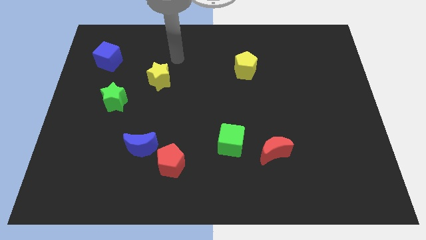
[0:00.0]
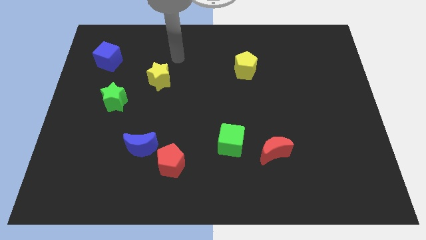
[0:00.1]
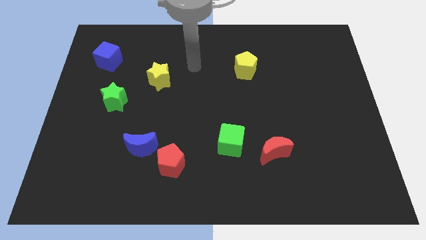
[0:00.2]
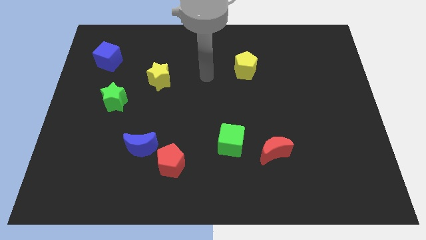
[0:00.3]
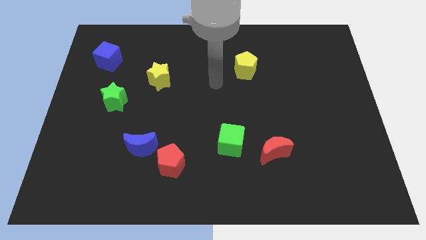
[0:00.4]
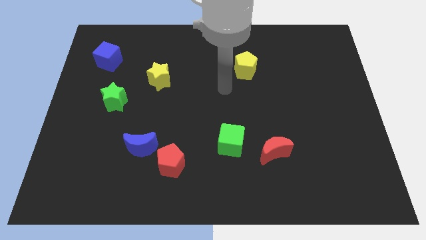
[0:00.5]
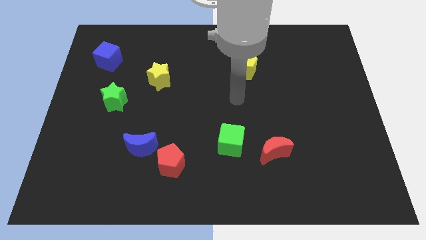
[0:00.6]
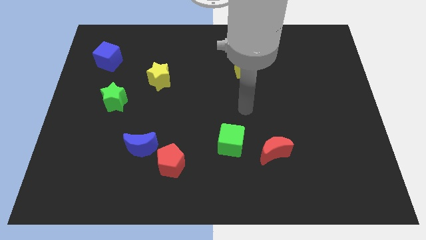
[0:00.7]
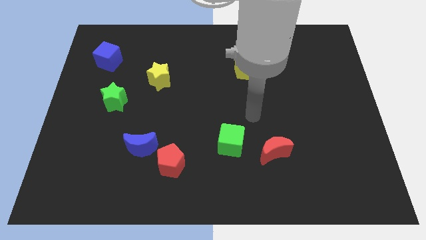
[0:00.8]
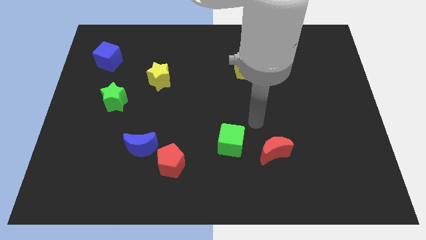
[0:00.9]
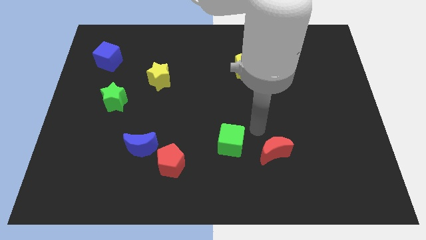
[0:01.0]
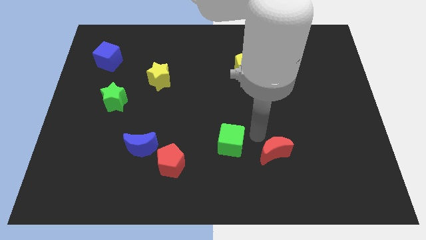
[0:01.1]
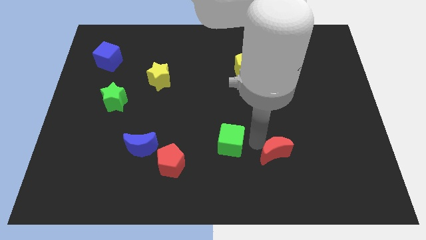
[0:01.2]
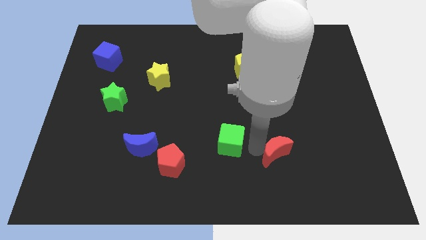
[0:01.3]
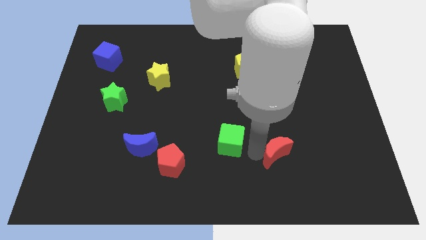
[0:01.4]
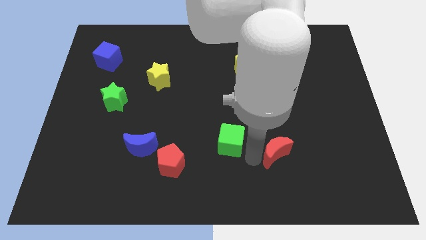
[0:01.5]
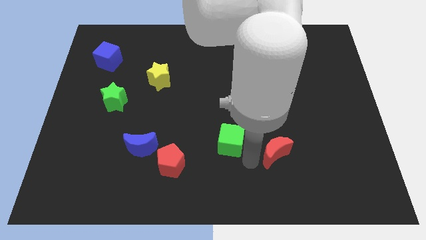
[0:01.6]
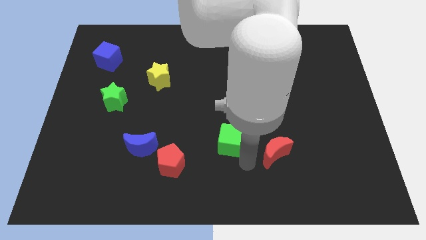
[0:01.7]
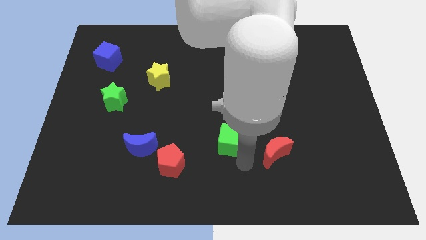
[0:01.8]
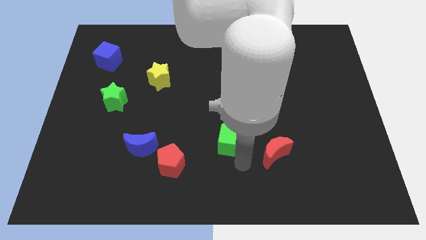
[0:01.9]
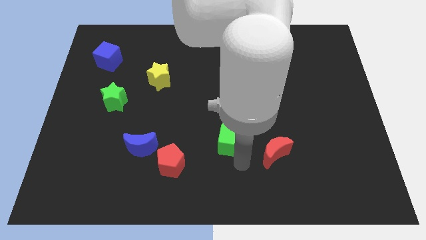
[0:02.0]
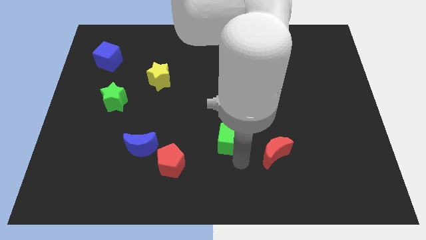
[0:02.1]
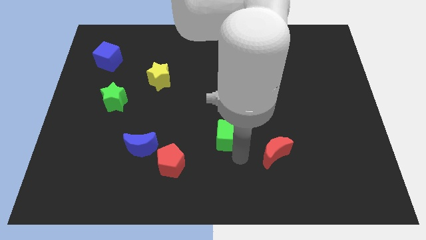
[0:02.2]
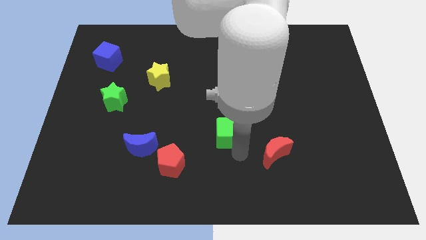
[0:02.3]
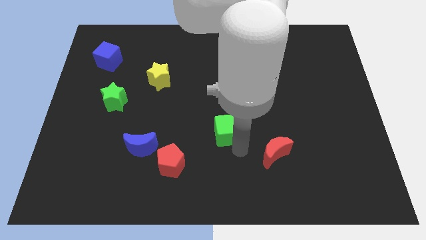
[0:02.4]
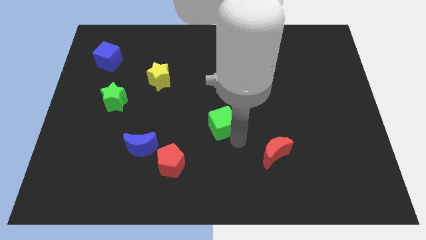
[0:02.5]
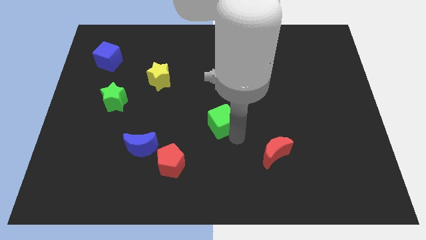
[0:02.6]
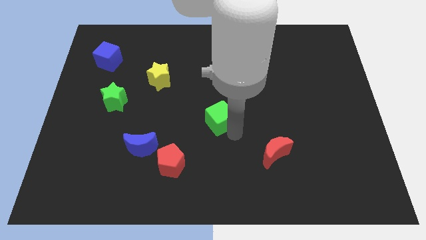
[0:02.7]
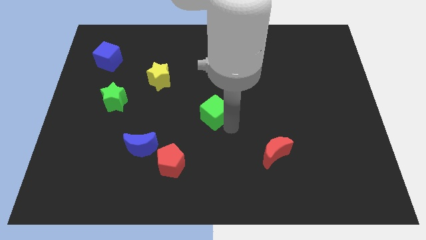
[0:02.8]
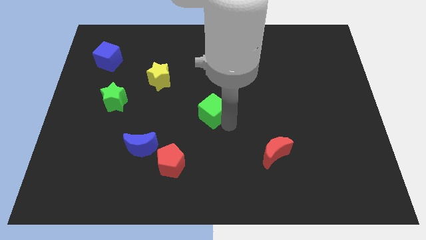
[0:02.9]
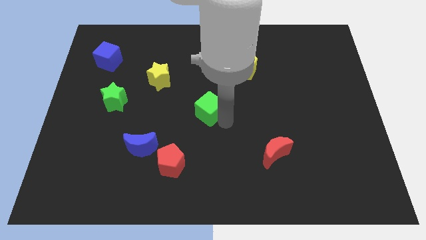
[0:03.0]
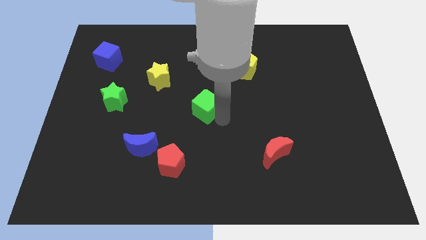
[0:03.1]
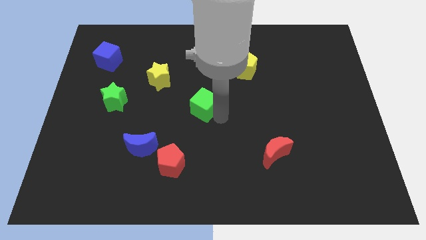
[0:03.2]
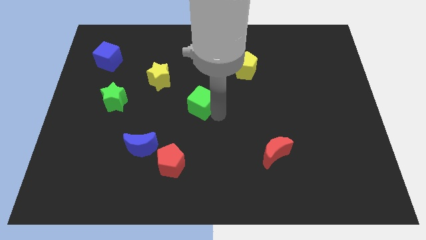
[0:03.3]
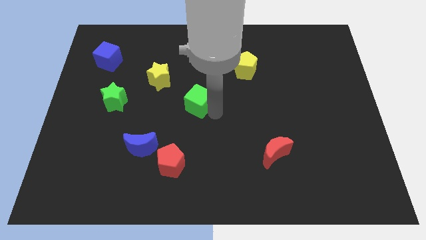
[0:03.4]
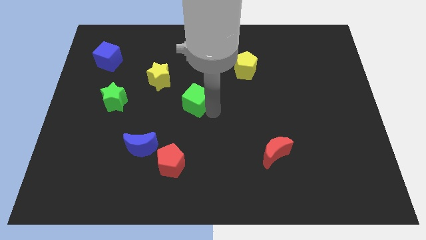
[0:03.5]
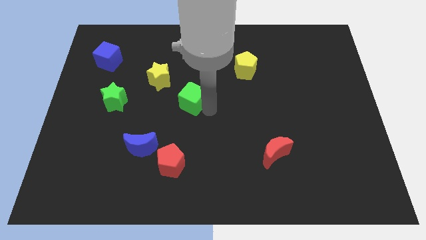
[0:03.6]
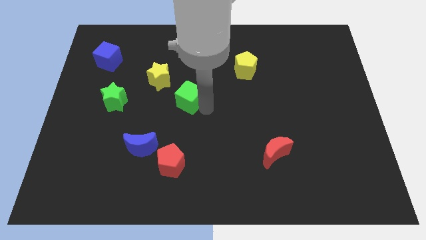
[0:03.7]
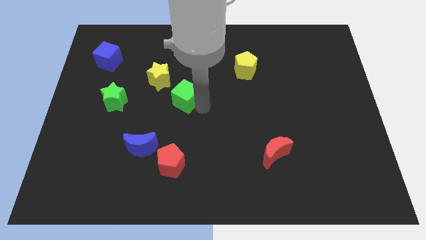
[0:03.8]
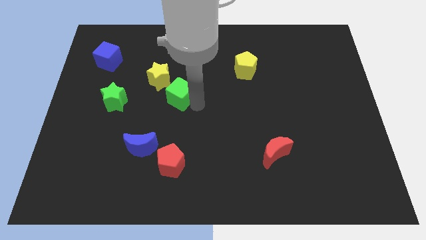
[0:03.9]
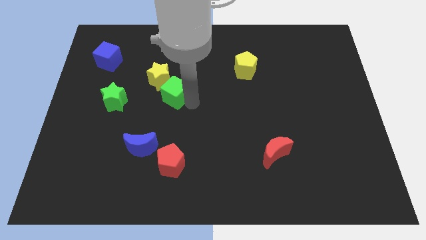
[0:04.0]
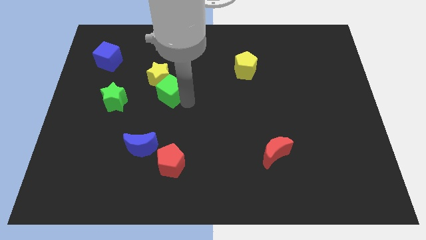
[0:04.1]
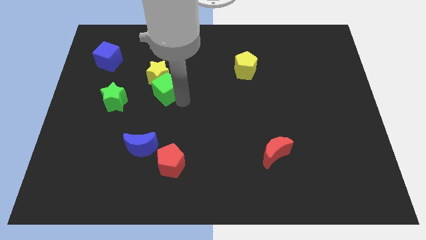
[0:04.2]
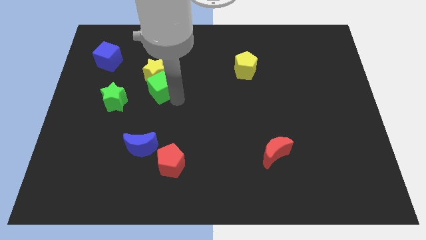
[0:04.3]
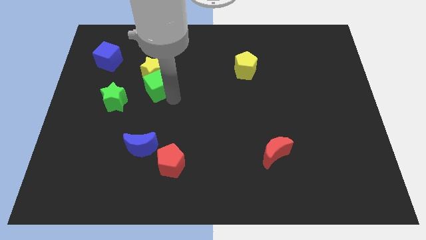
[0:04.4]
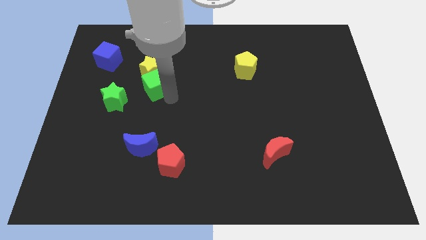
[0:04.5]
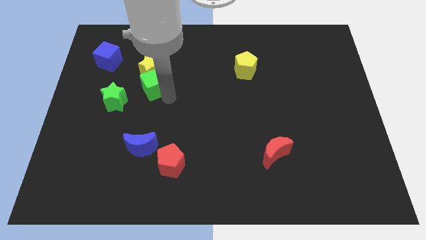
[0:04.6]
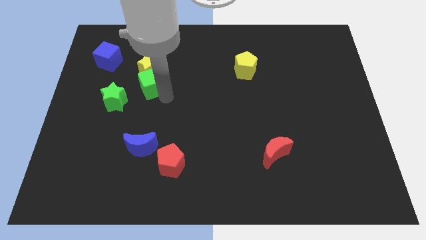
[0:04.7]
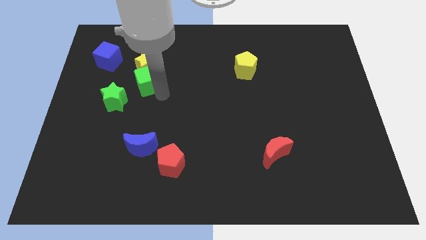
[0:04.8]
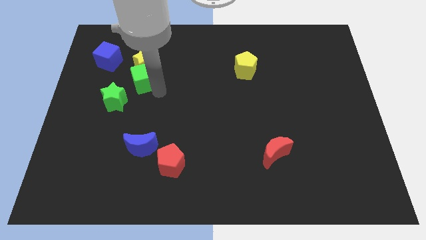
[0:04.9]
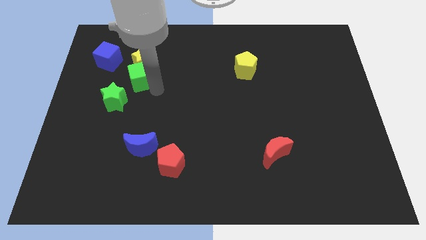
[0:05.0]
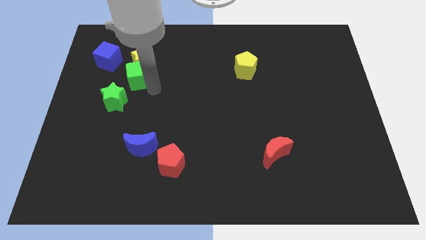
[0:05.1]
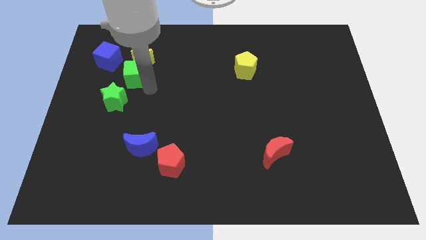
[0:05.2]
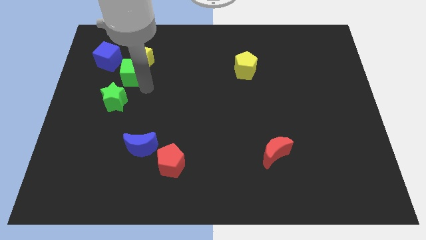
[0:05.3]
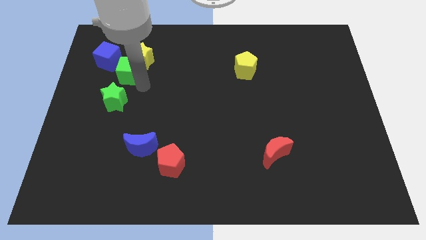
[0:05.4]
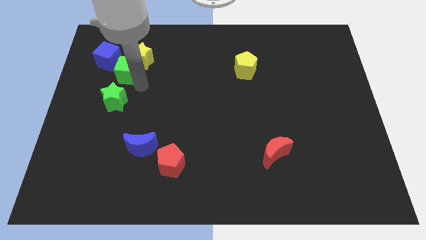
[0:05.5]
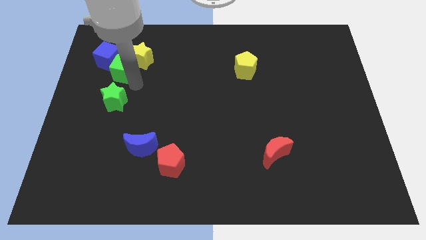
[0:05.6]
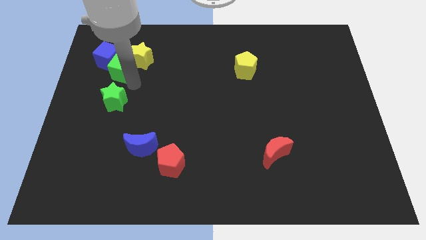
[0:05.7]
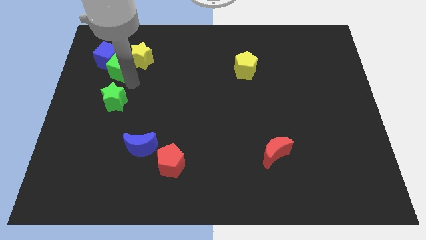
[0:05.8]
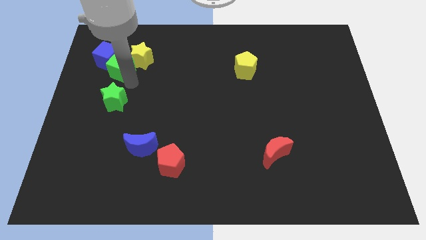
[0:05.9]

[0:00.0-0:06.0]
put the green cube towards the blue cube

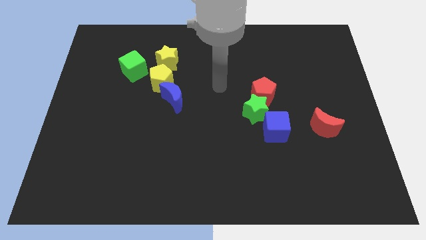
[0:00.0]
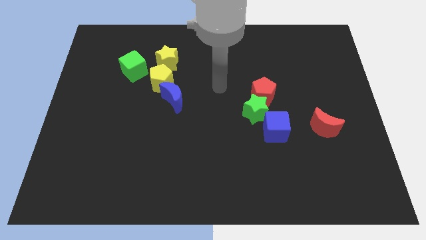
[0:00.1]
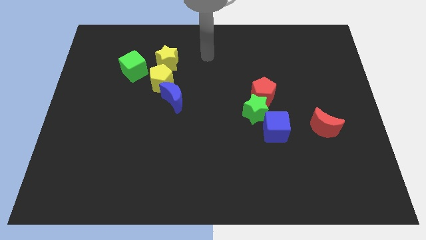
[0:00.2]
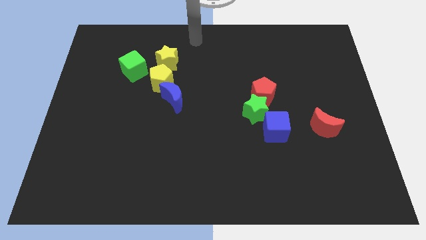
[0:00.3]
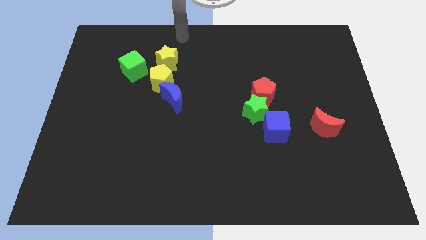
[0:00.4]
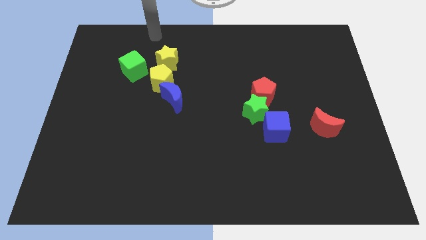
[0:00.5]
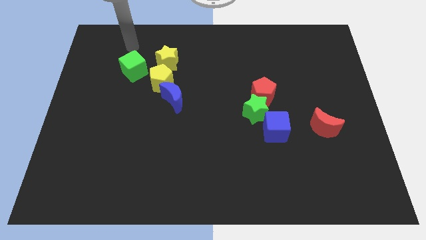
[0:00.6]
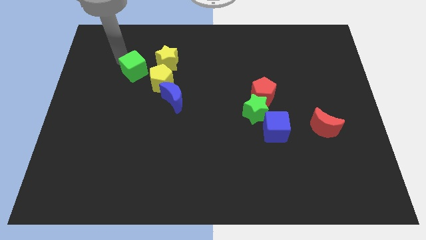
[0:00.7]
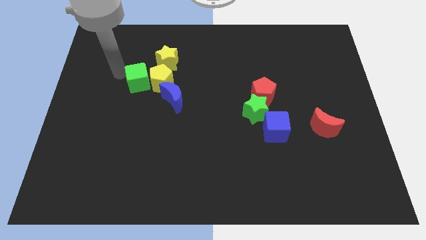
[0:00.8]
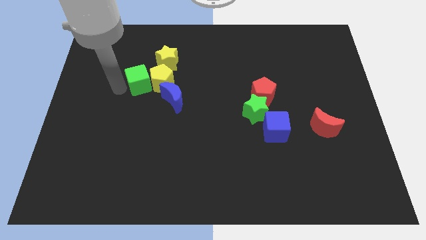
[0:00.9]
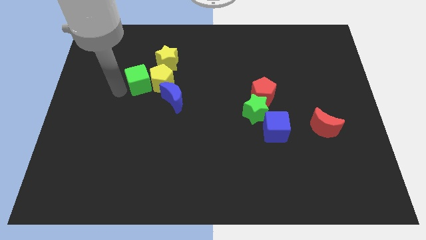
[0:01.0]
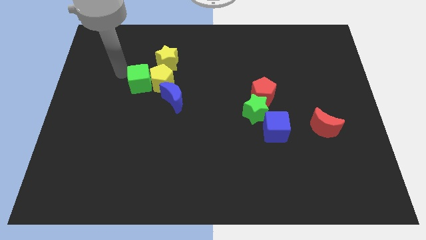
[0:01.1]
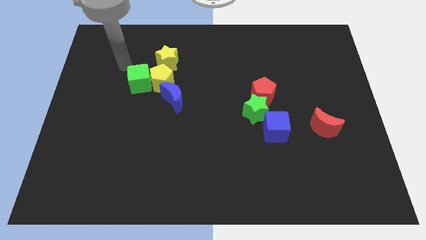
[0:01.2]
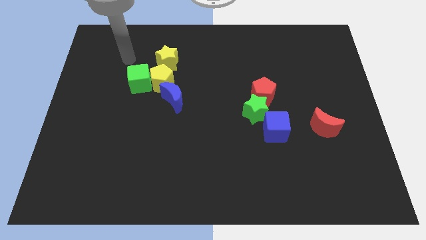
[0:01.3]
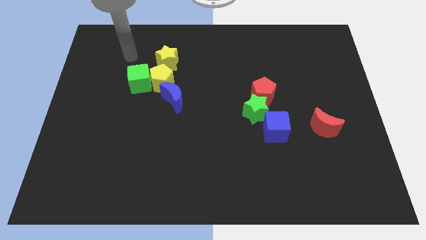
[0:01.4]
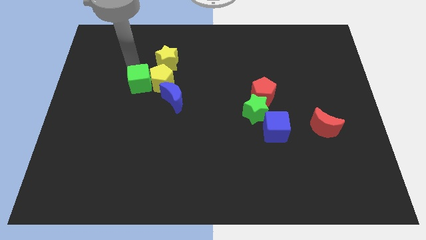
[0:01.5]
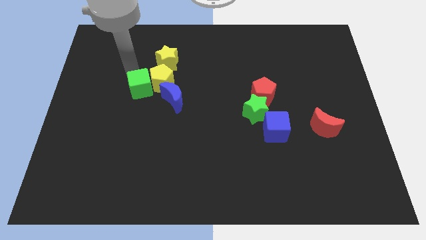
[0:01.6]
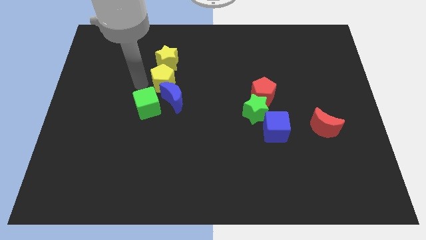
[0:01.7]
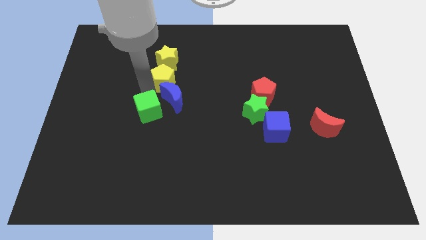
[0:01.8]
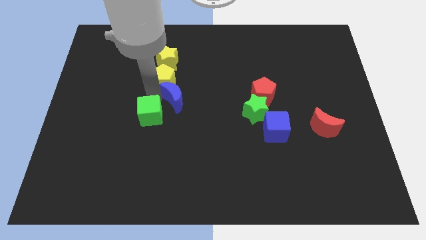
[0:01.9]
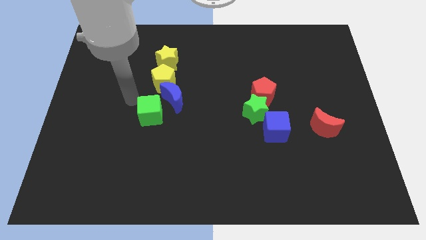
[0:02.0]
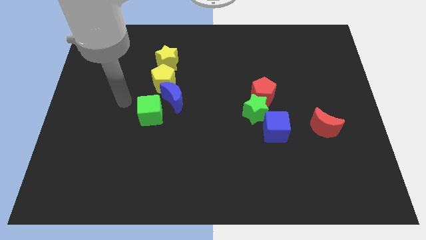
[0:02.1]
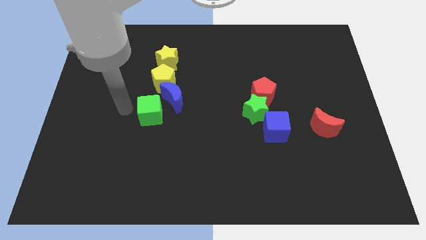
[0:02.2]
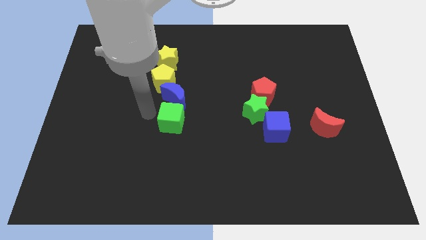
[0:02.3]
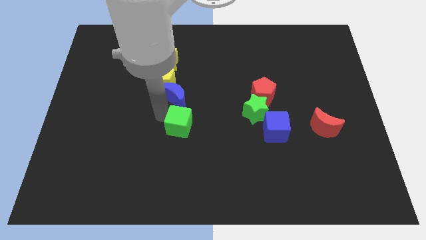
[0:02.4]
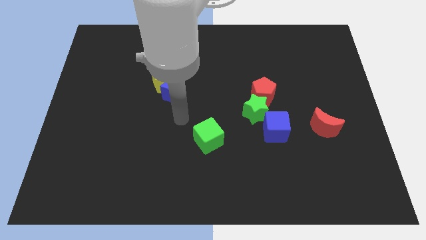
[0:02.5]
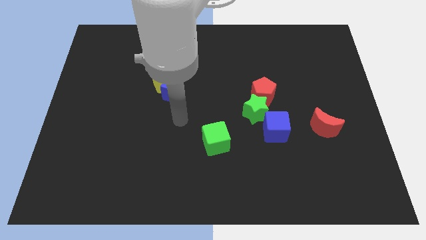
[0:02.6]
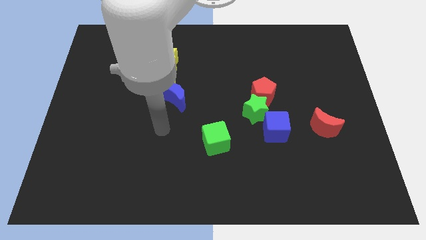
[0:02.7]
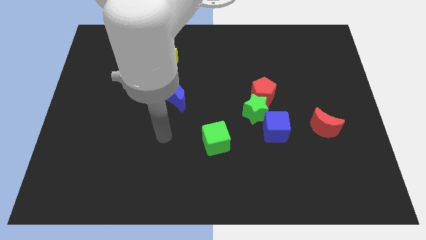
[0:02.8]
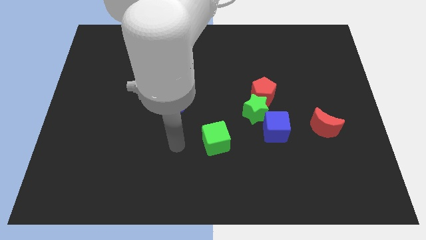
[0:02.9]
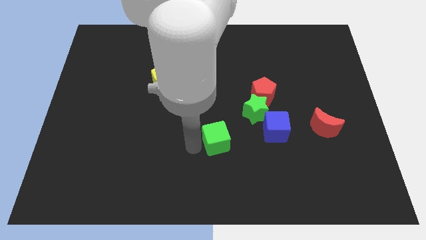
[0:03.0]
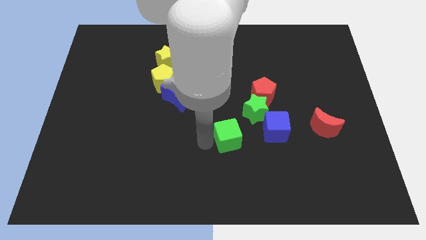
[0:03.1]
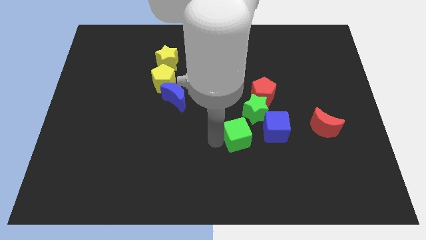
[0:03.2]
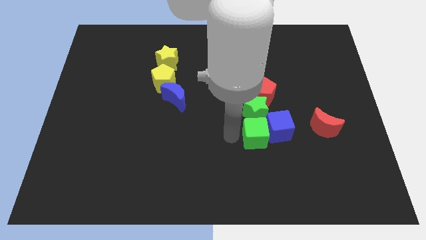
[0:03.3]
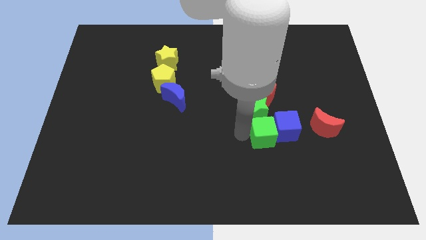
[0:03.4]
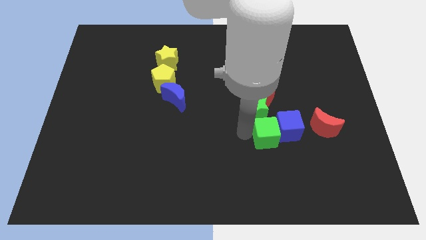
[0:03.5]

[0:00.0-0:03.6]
put the green cube close to the blue cube
